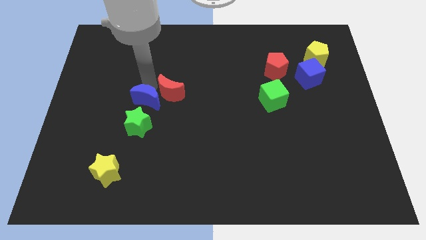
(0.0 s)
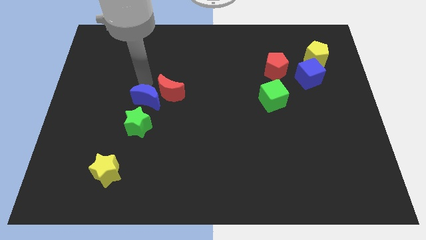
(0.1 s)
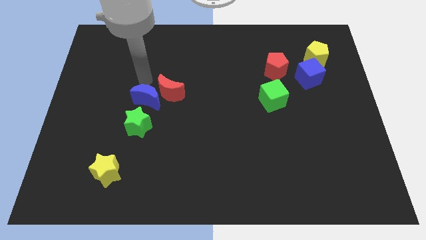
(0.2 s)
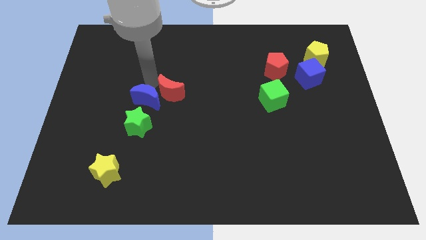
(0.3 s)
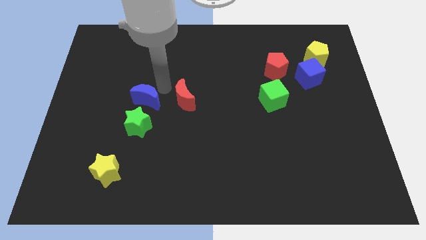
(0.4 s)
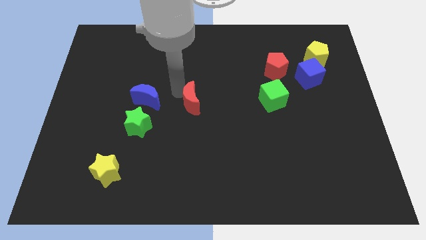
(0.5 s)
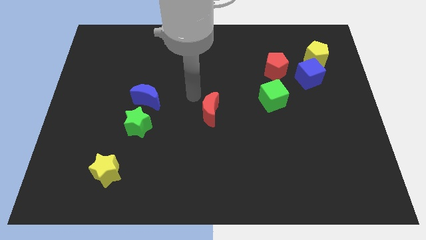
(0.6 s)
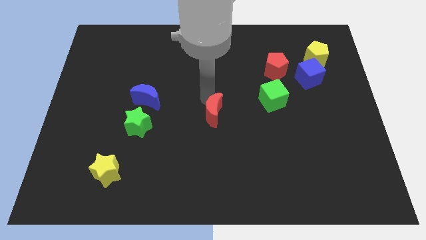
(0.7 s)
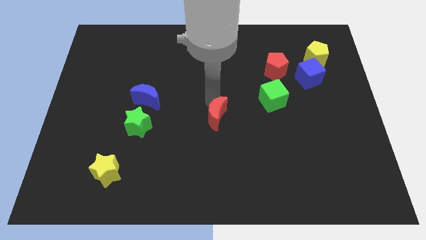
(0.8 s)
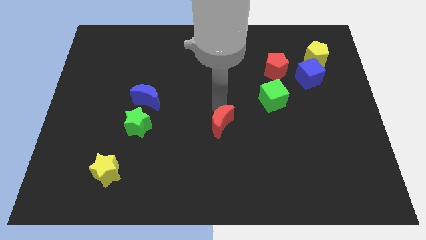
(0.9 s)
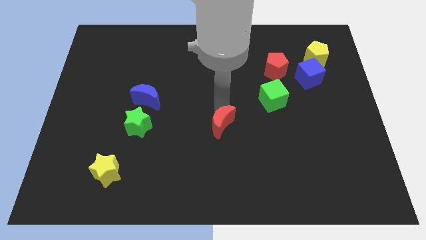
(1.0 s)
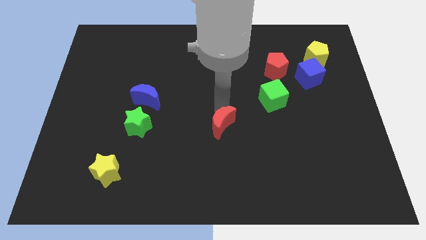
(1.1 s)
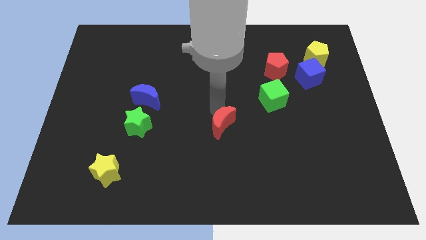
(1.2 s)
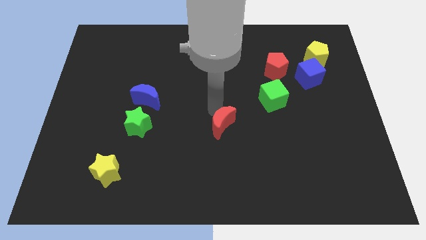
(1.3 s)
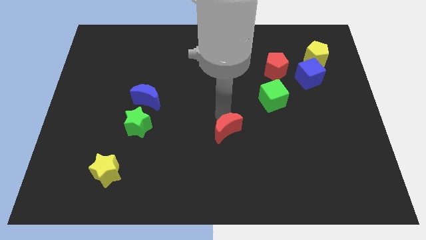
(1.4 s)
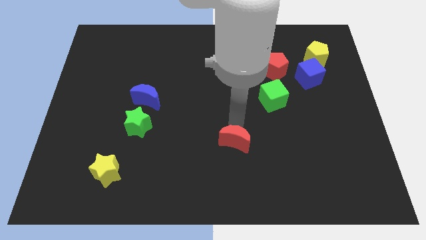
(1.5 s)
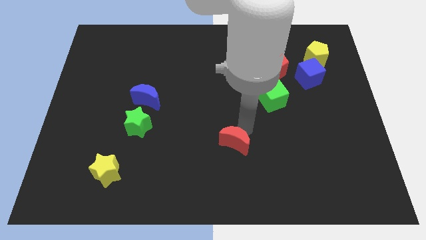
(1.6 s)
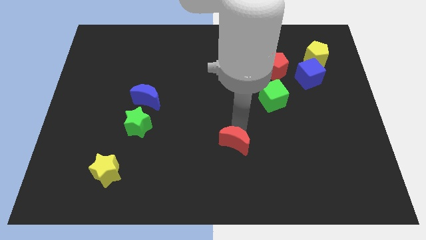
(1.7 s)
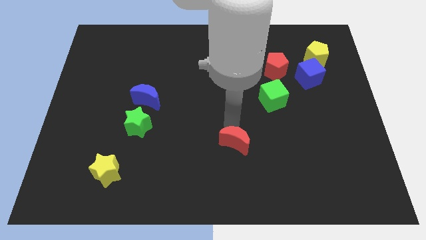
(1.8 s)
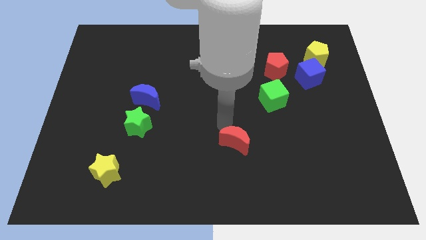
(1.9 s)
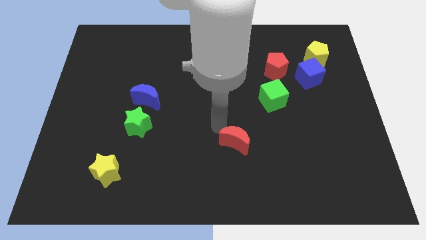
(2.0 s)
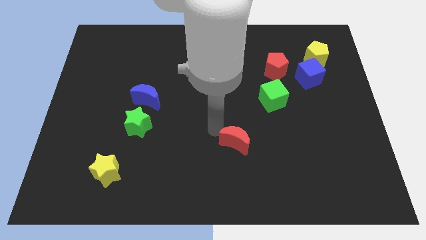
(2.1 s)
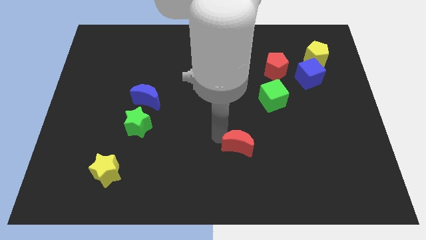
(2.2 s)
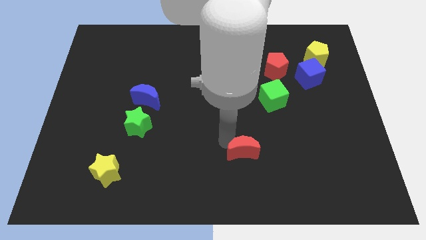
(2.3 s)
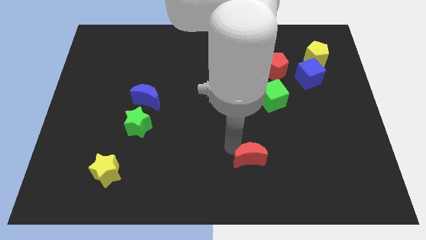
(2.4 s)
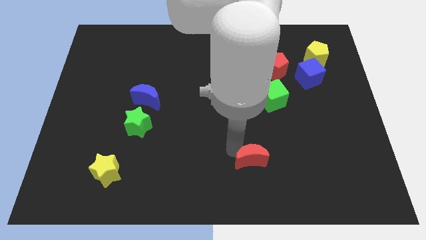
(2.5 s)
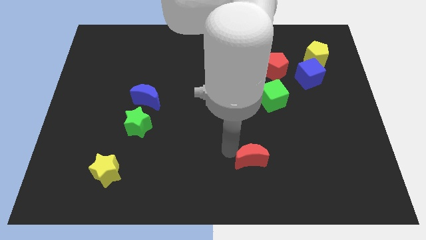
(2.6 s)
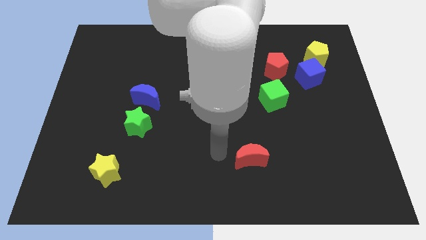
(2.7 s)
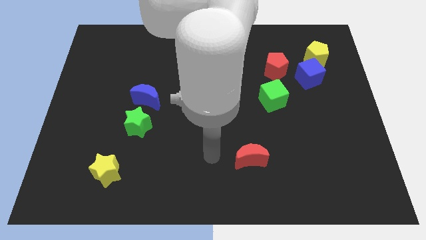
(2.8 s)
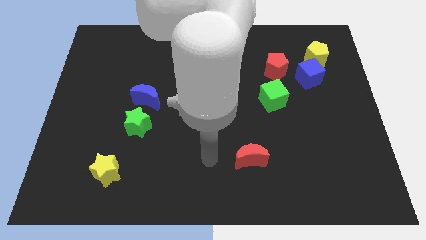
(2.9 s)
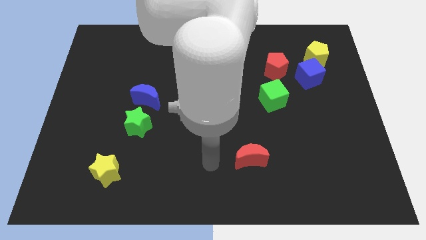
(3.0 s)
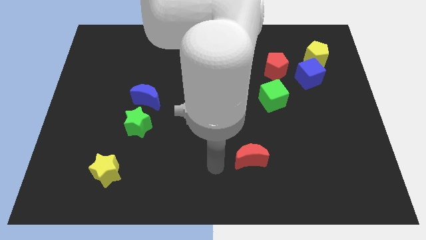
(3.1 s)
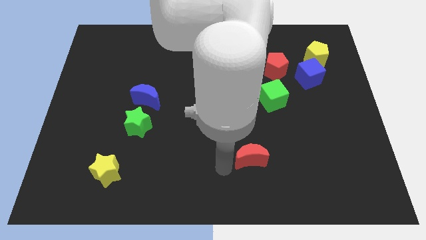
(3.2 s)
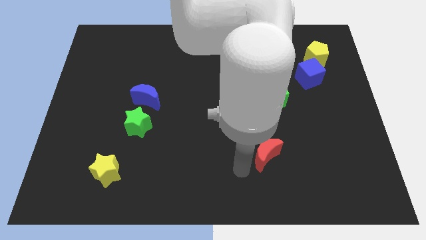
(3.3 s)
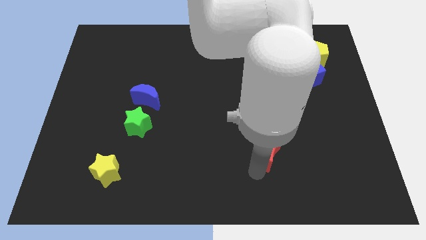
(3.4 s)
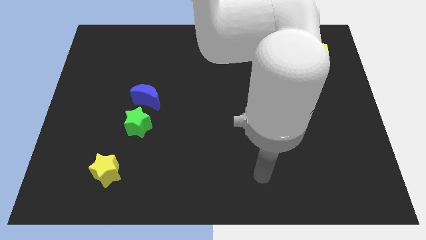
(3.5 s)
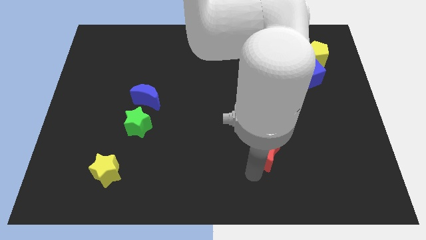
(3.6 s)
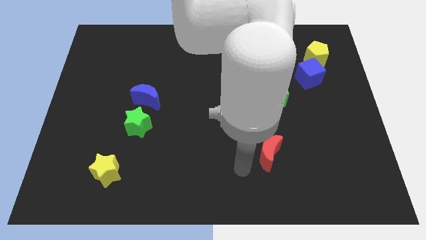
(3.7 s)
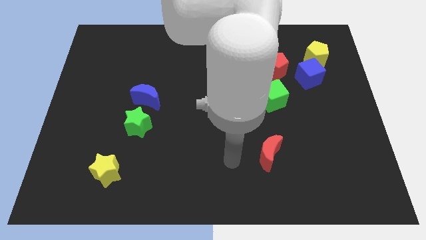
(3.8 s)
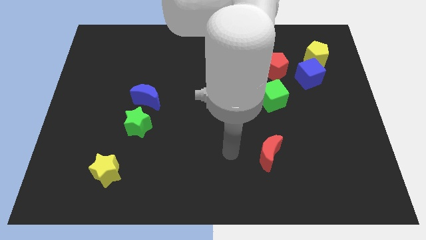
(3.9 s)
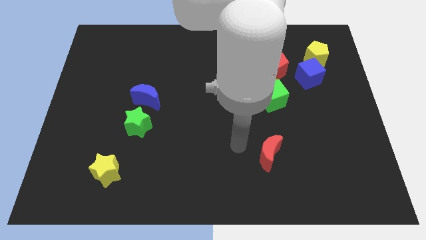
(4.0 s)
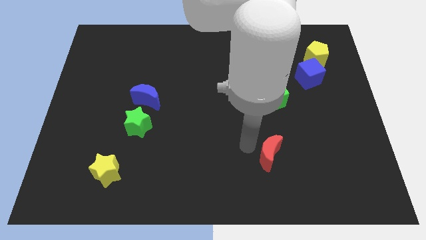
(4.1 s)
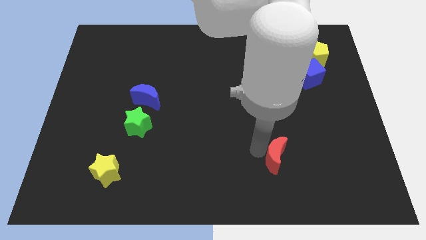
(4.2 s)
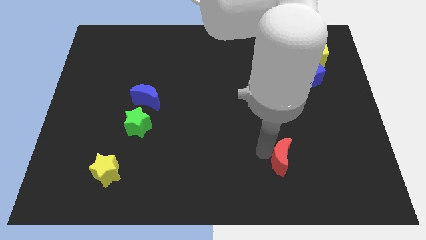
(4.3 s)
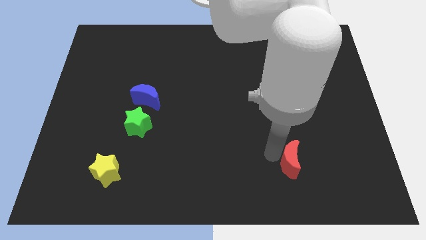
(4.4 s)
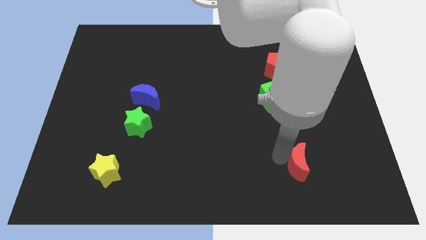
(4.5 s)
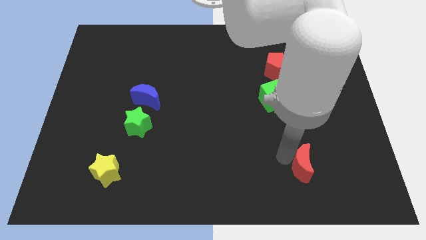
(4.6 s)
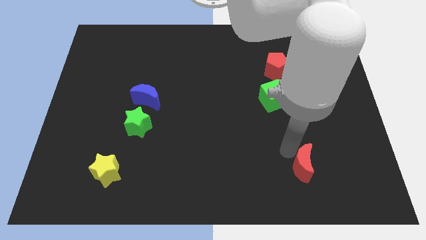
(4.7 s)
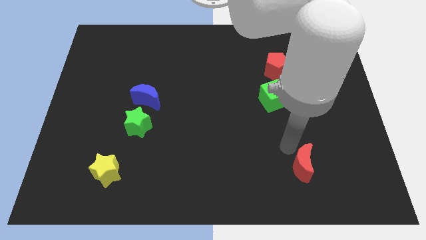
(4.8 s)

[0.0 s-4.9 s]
place the red moon right to the yellow star

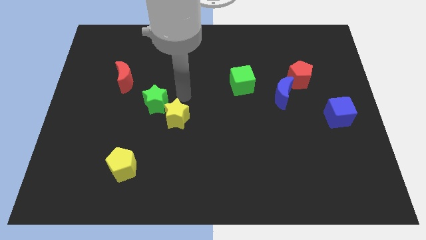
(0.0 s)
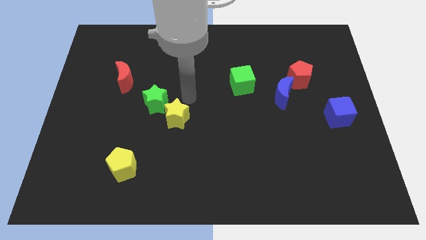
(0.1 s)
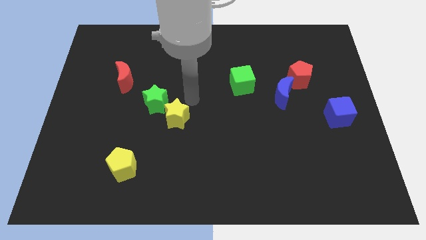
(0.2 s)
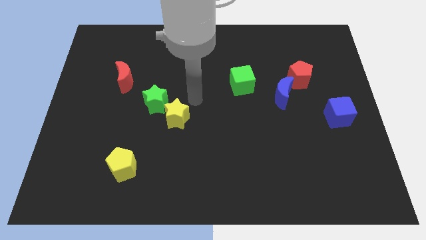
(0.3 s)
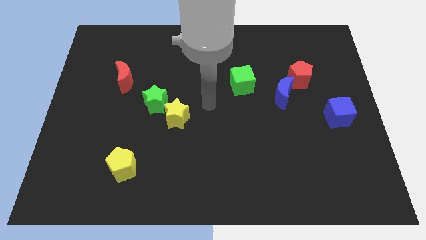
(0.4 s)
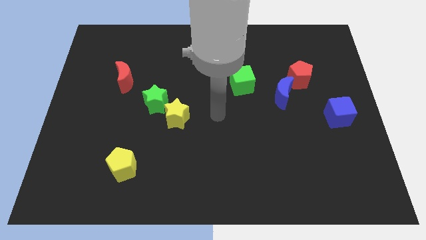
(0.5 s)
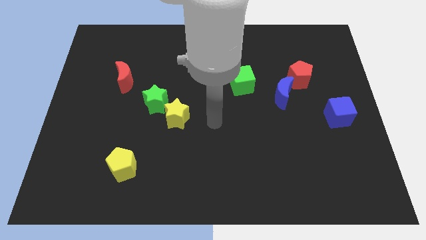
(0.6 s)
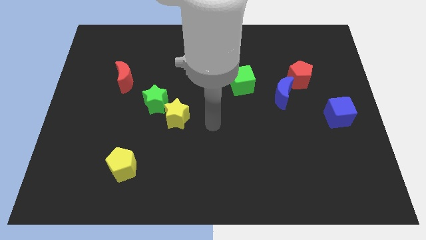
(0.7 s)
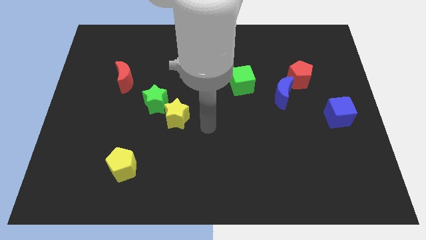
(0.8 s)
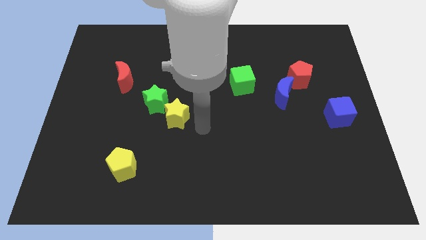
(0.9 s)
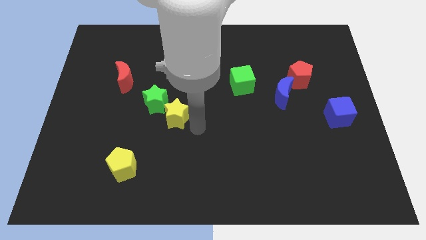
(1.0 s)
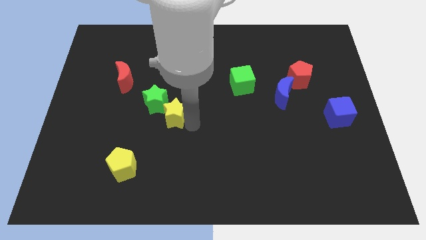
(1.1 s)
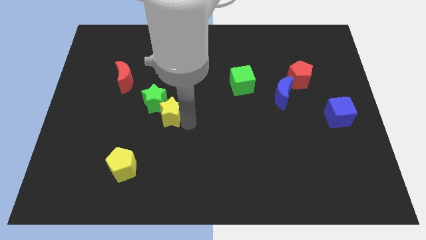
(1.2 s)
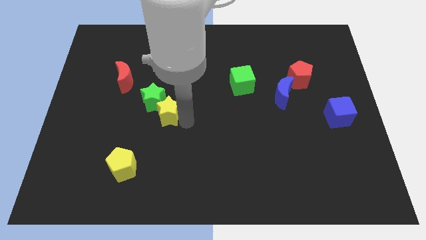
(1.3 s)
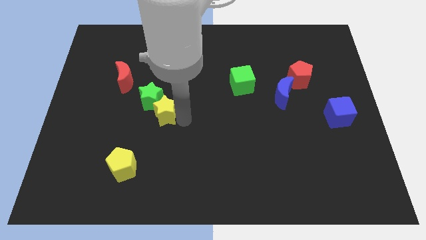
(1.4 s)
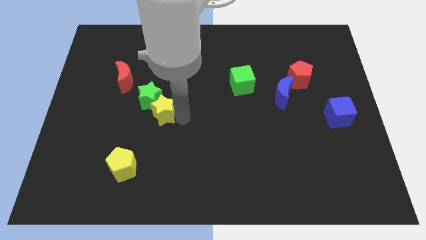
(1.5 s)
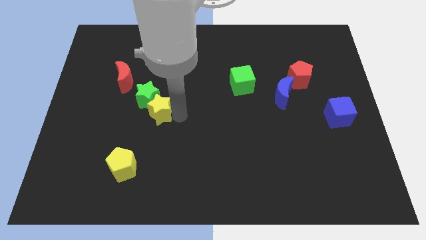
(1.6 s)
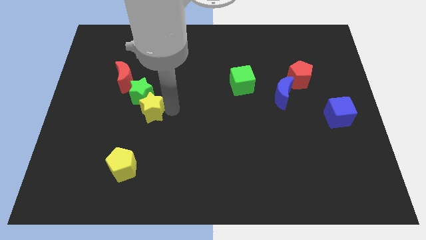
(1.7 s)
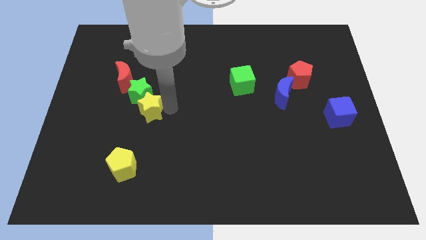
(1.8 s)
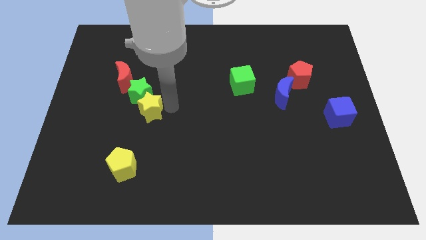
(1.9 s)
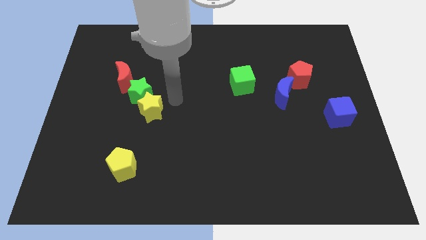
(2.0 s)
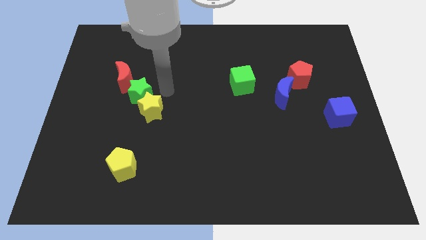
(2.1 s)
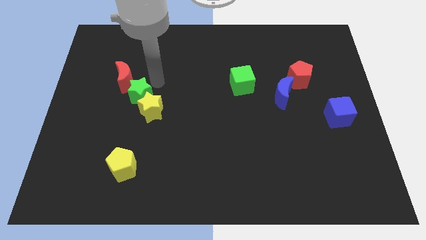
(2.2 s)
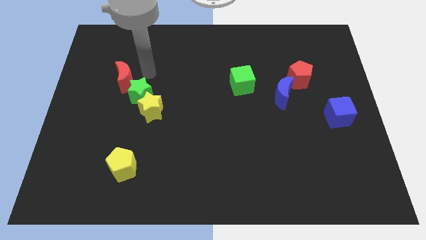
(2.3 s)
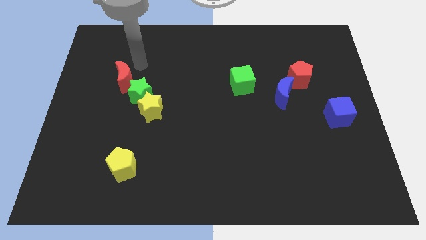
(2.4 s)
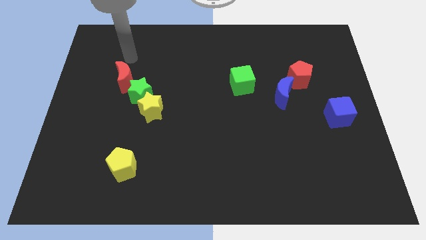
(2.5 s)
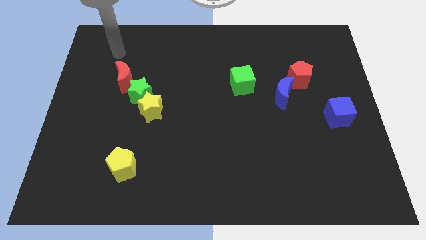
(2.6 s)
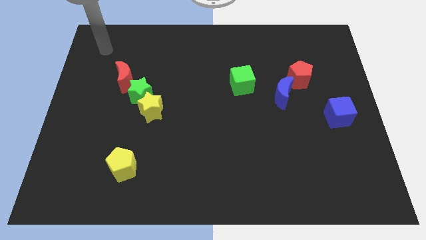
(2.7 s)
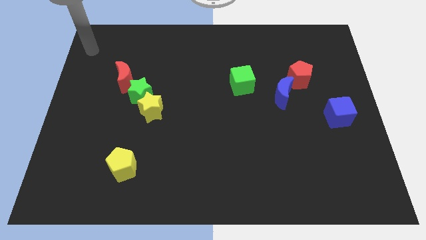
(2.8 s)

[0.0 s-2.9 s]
place the yellow star and green star at the bottom right side of the red moon

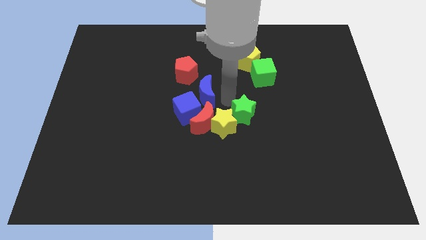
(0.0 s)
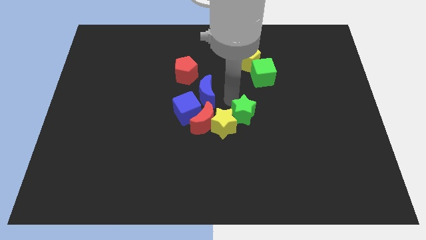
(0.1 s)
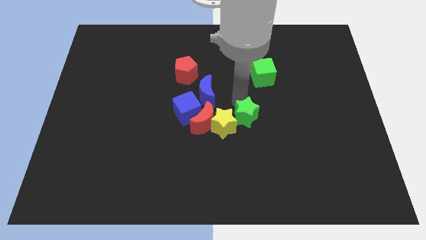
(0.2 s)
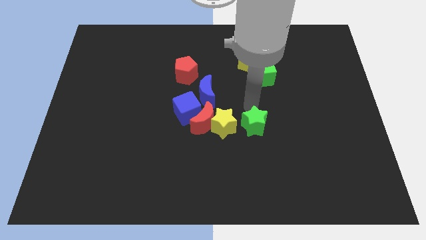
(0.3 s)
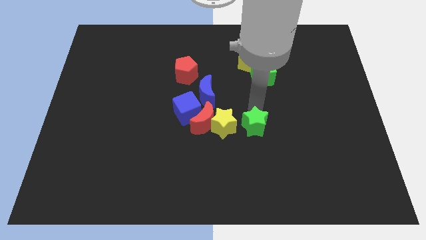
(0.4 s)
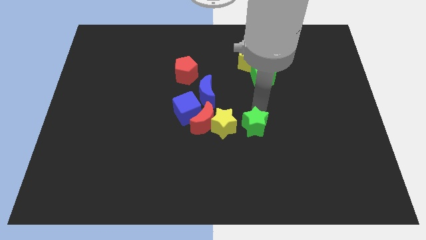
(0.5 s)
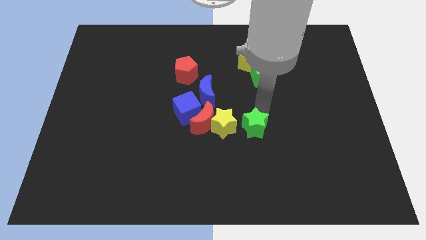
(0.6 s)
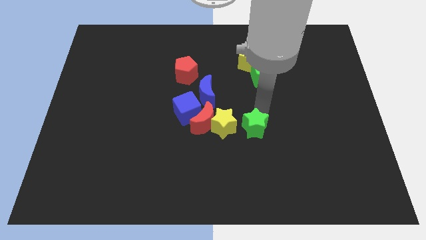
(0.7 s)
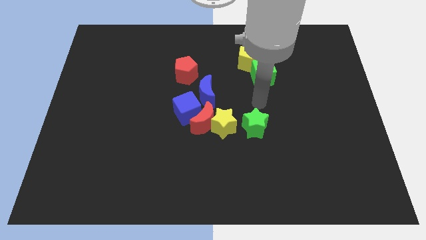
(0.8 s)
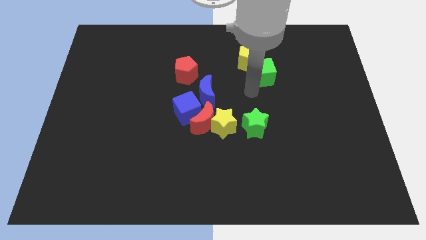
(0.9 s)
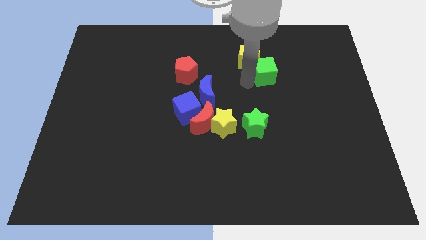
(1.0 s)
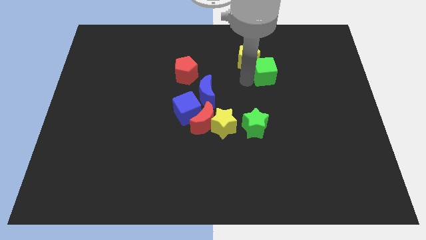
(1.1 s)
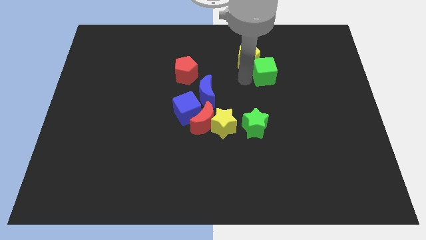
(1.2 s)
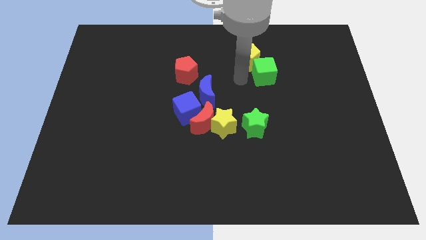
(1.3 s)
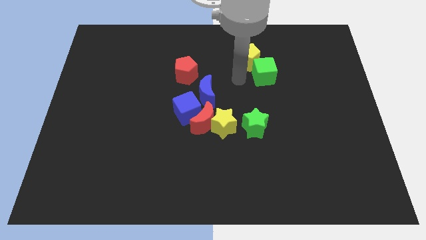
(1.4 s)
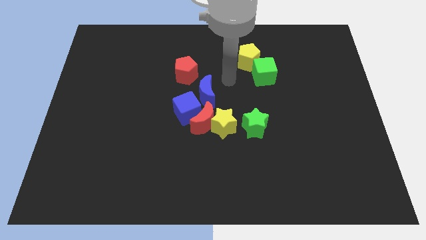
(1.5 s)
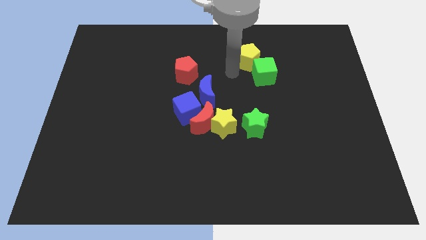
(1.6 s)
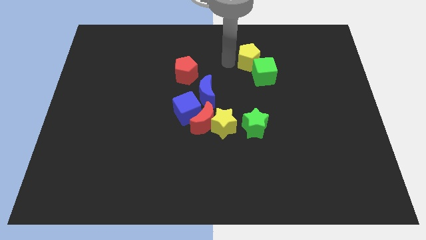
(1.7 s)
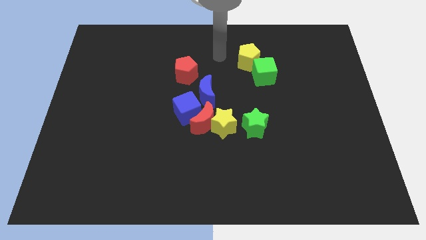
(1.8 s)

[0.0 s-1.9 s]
separate green star from the yellow star
